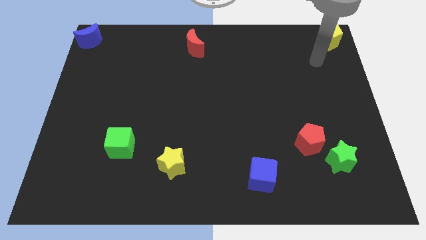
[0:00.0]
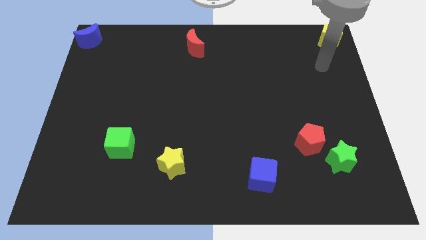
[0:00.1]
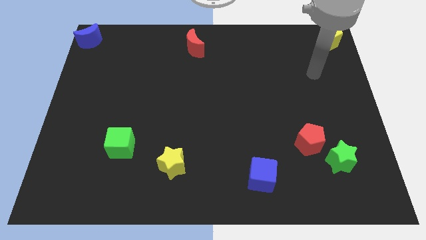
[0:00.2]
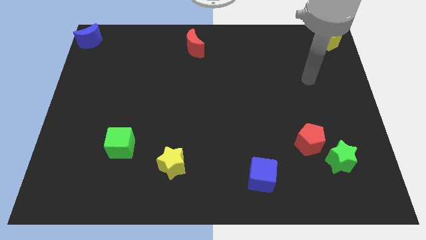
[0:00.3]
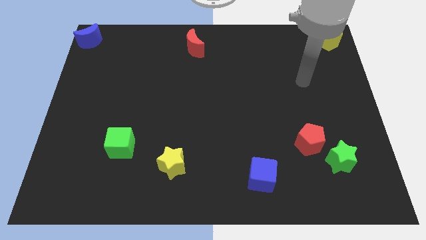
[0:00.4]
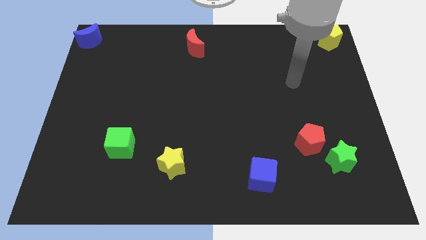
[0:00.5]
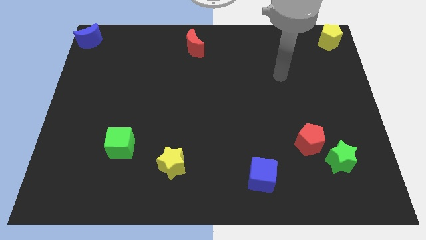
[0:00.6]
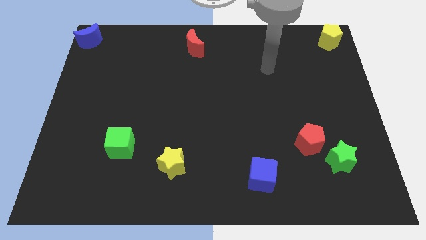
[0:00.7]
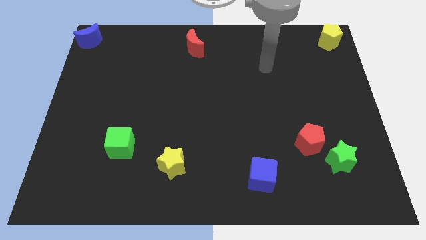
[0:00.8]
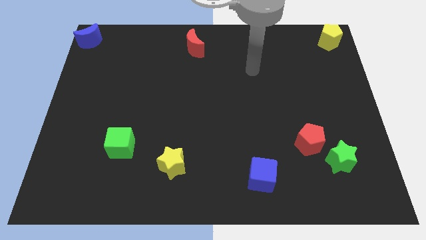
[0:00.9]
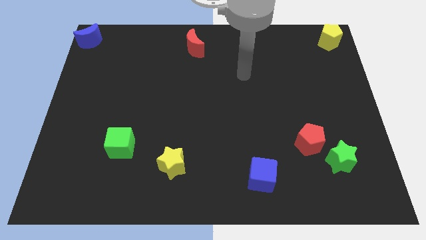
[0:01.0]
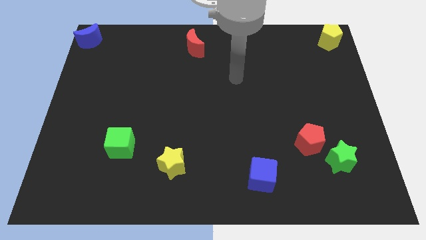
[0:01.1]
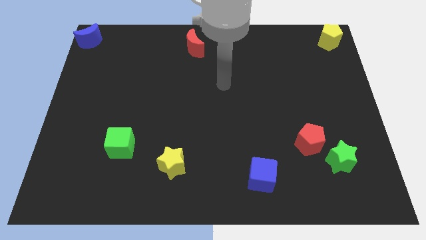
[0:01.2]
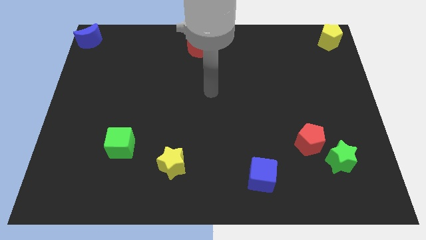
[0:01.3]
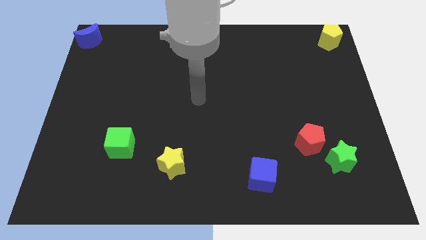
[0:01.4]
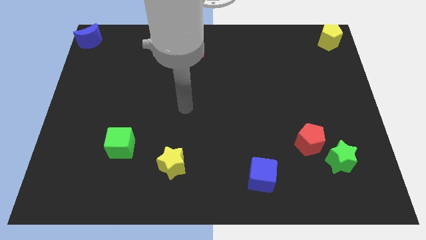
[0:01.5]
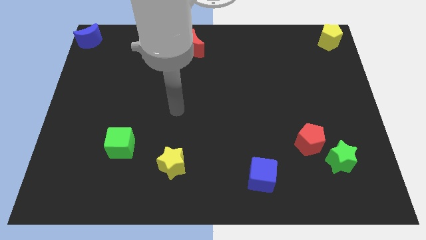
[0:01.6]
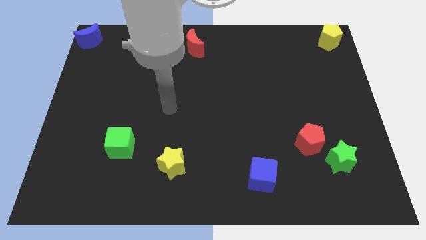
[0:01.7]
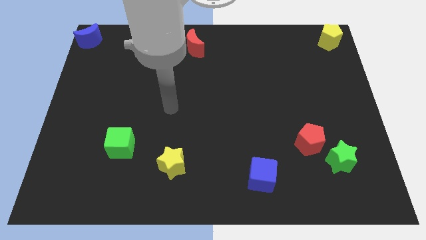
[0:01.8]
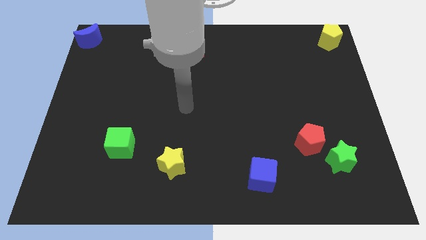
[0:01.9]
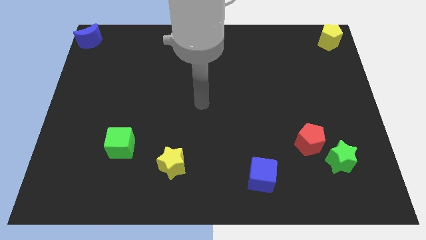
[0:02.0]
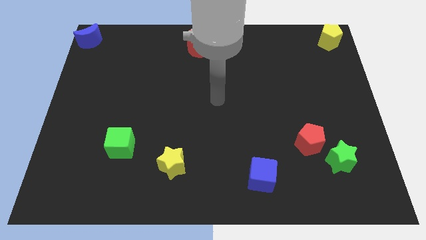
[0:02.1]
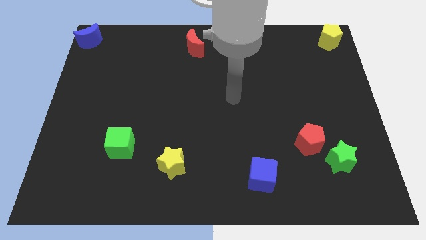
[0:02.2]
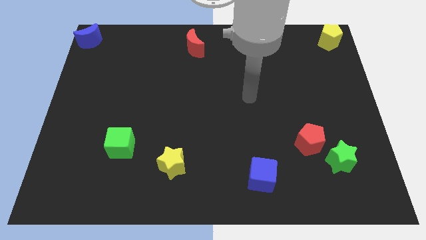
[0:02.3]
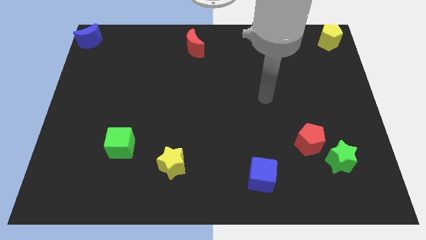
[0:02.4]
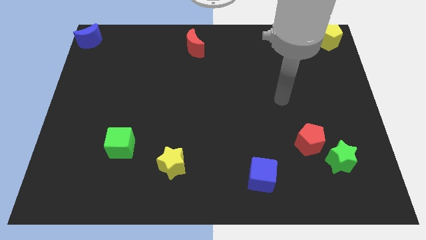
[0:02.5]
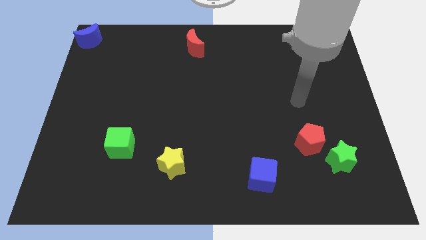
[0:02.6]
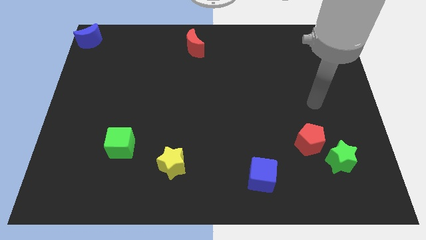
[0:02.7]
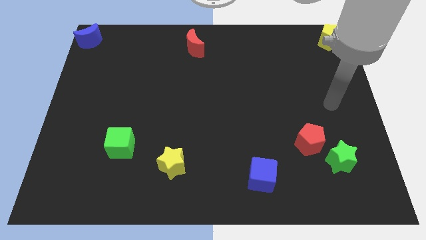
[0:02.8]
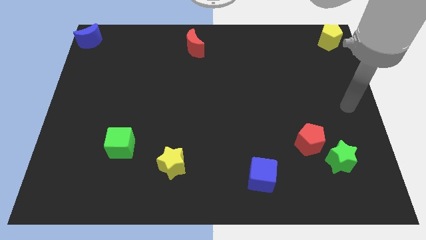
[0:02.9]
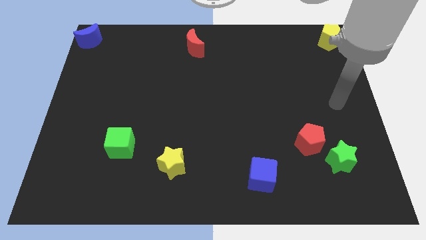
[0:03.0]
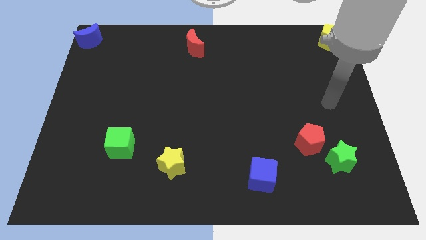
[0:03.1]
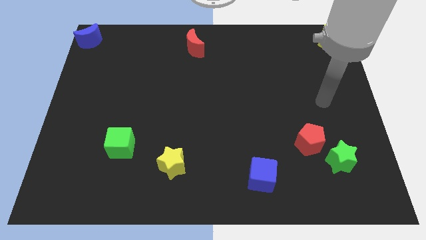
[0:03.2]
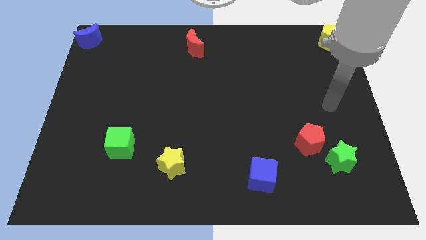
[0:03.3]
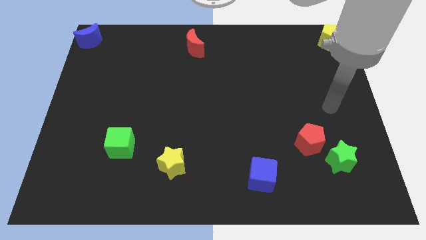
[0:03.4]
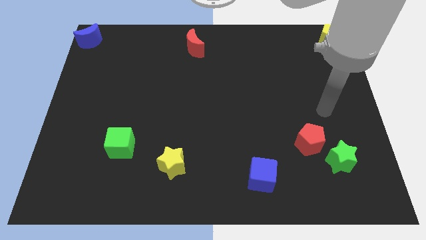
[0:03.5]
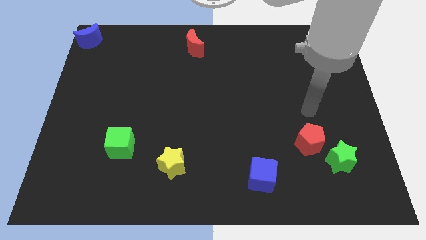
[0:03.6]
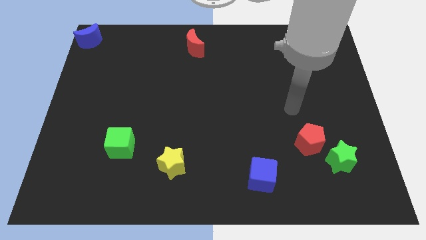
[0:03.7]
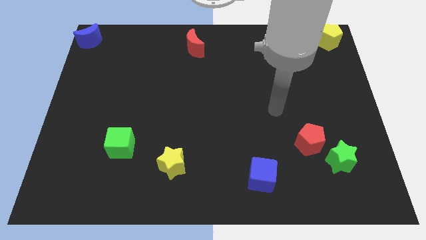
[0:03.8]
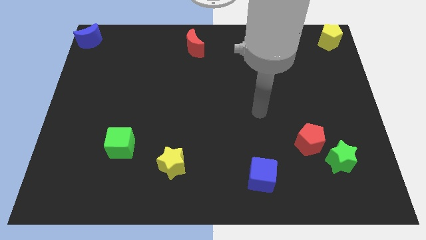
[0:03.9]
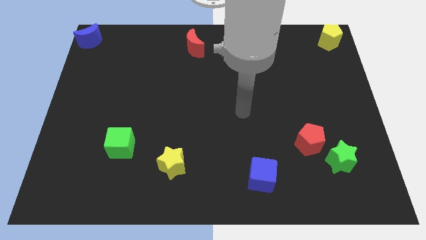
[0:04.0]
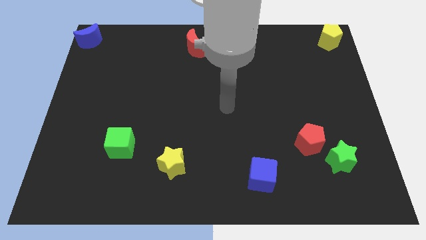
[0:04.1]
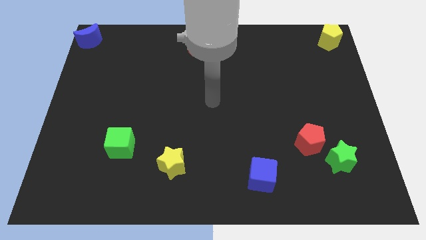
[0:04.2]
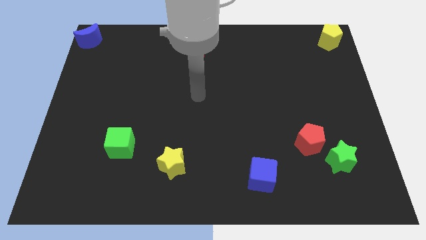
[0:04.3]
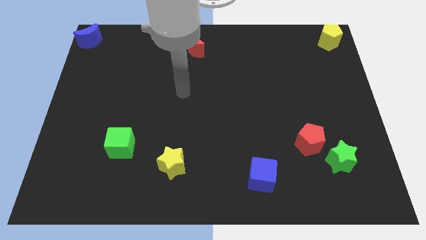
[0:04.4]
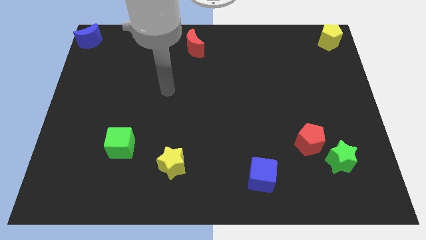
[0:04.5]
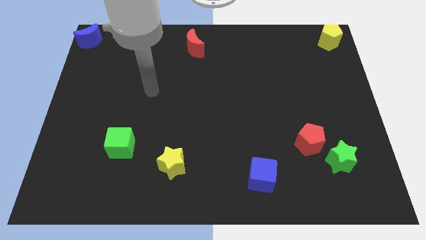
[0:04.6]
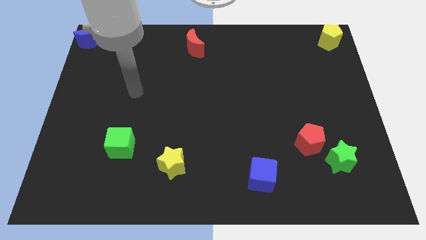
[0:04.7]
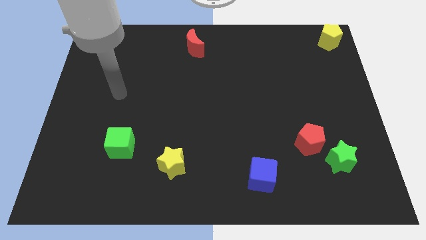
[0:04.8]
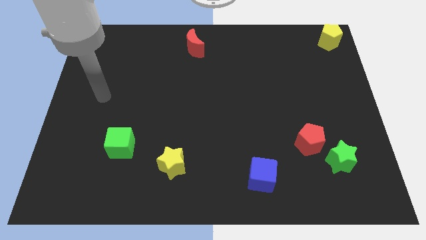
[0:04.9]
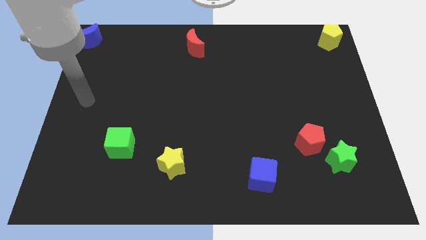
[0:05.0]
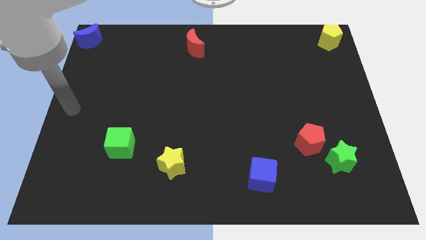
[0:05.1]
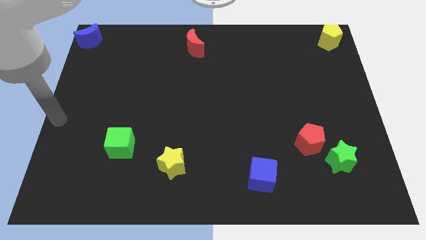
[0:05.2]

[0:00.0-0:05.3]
point your arm at the center left of the board

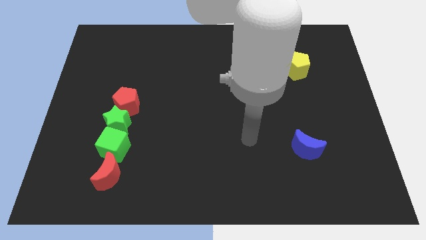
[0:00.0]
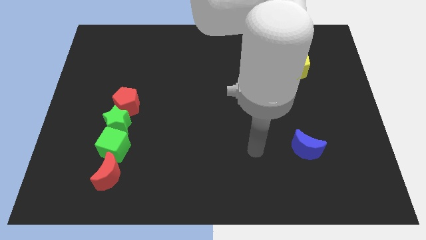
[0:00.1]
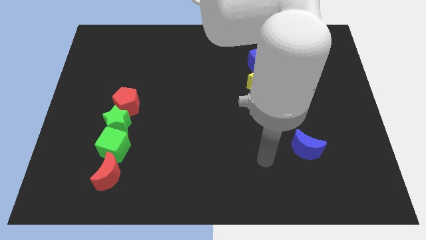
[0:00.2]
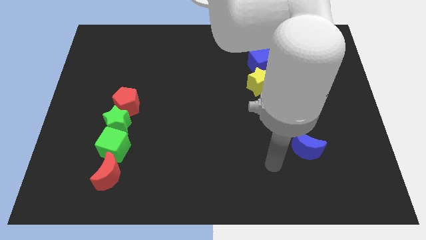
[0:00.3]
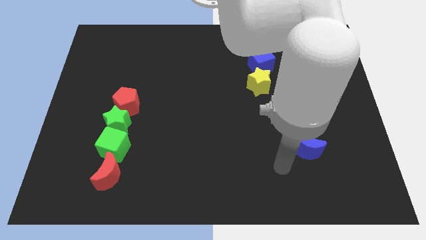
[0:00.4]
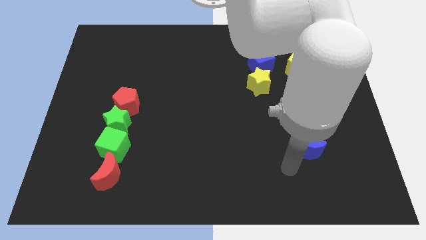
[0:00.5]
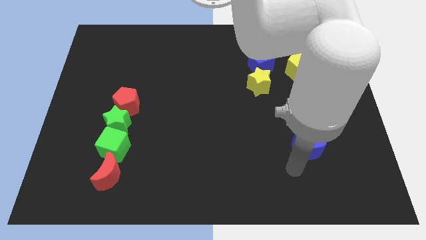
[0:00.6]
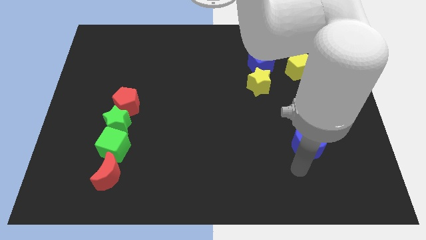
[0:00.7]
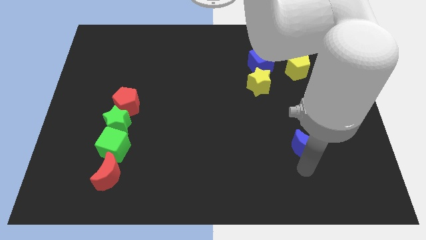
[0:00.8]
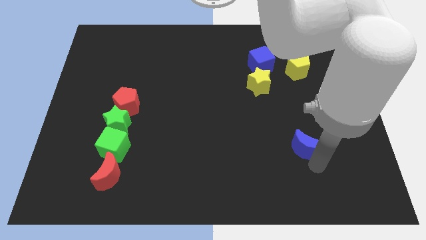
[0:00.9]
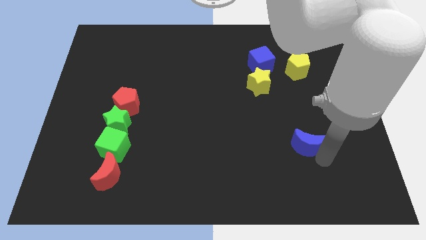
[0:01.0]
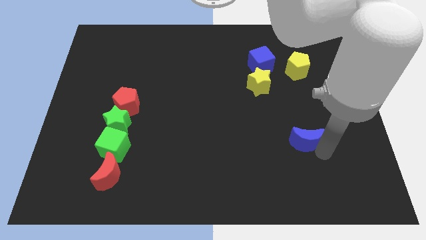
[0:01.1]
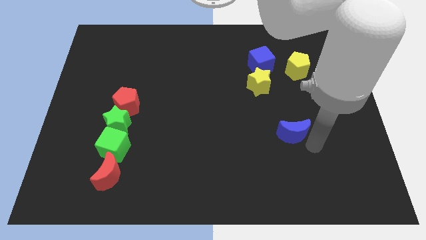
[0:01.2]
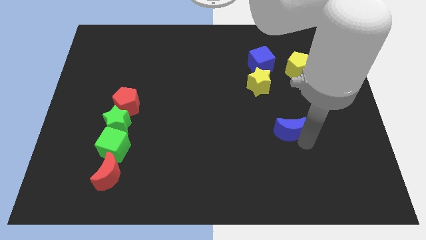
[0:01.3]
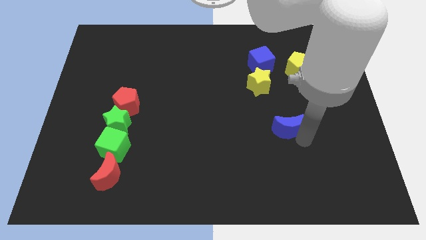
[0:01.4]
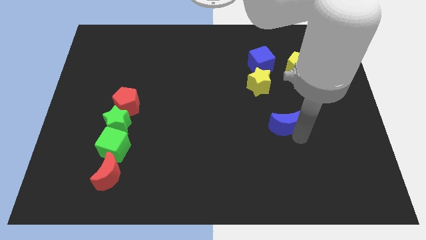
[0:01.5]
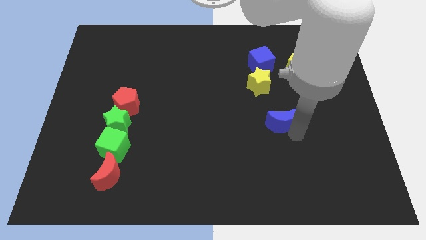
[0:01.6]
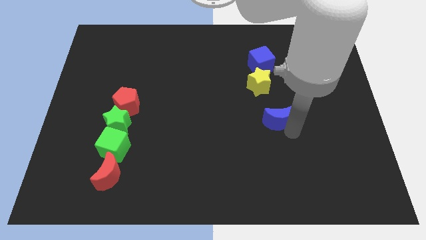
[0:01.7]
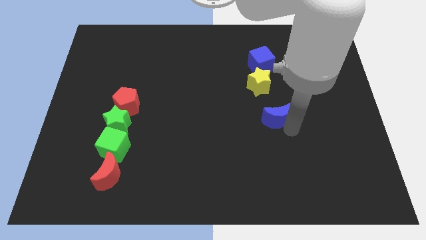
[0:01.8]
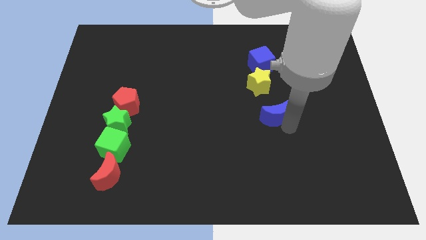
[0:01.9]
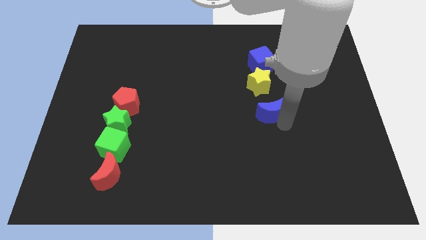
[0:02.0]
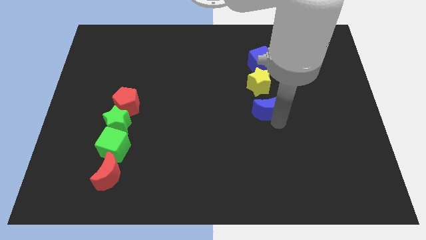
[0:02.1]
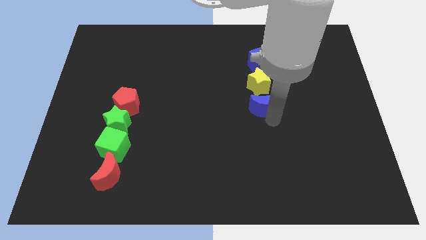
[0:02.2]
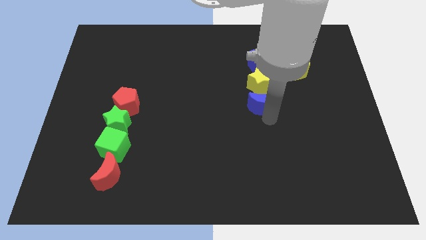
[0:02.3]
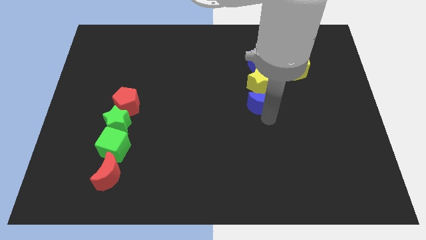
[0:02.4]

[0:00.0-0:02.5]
move the blue crescent to the bottom side of the yellow star

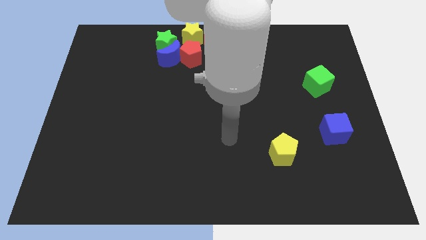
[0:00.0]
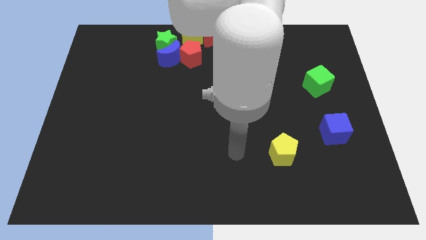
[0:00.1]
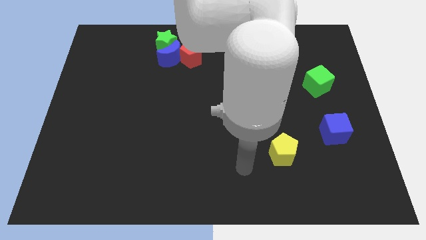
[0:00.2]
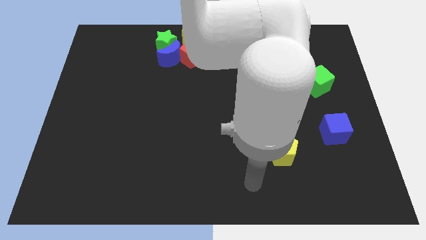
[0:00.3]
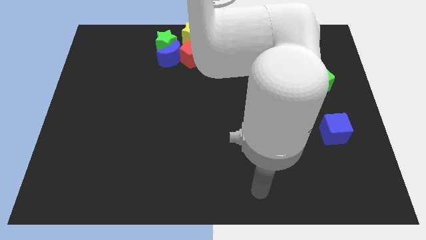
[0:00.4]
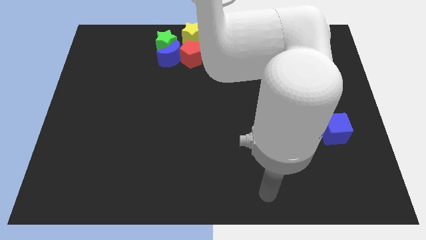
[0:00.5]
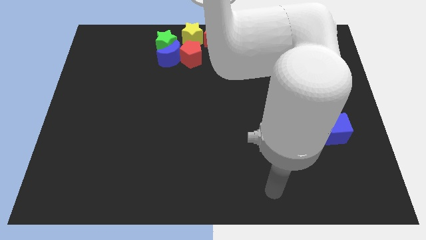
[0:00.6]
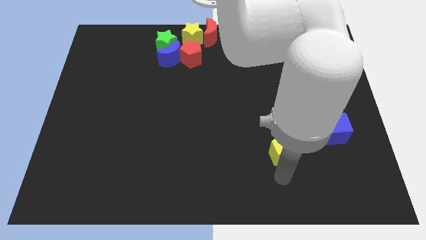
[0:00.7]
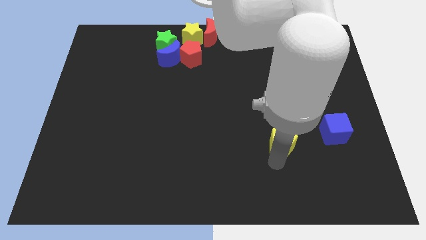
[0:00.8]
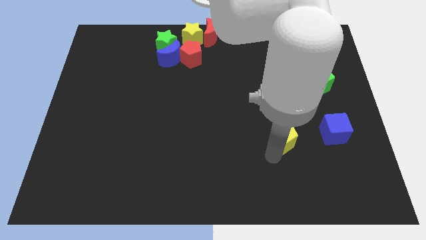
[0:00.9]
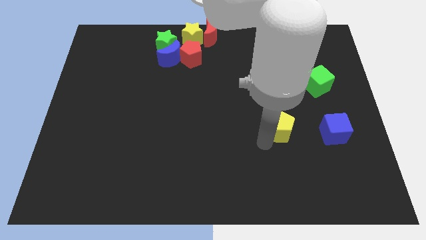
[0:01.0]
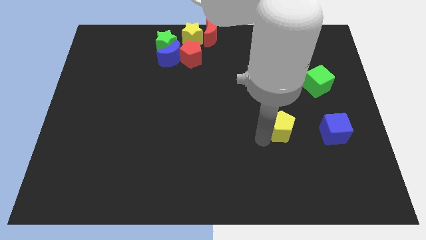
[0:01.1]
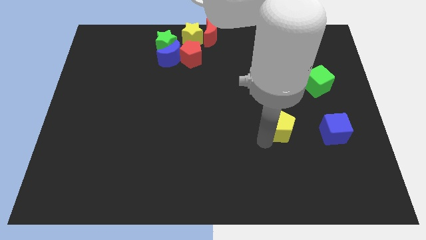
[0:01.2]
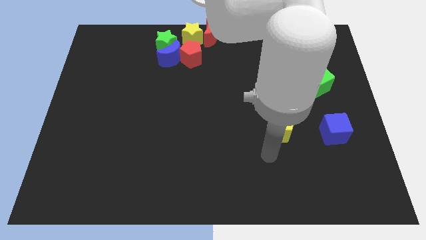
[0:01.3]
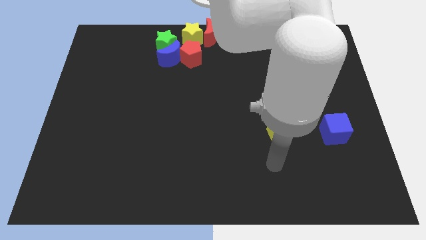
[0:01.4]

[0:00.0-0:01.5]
put the yellow pentagon parallel to the blue cube
